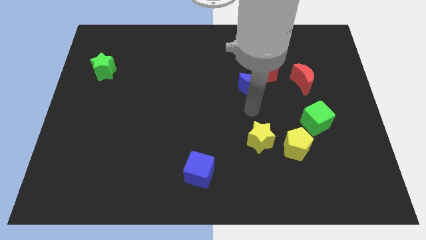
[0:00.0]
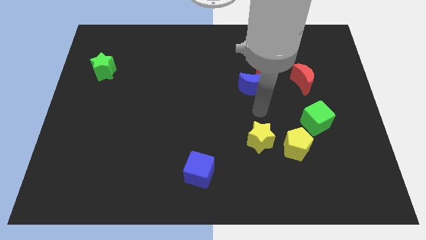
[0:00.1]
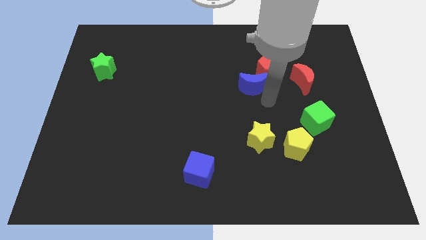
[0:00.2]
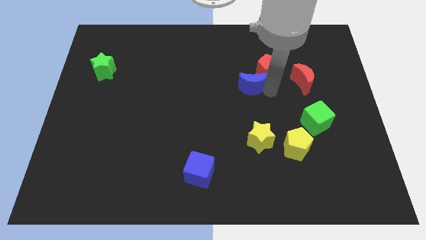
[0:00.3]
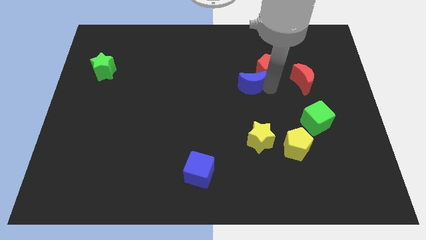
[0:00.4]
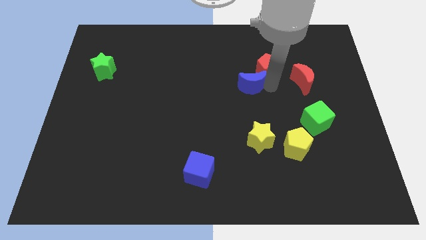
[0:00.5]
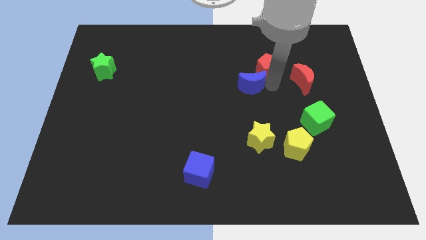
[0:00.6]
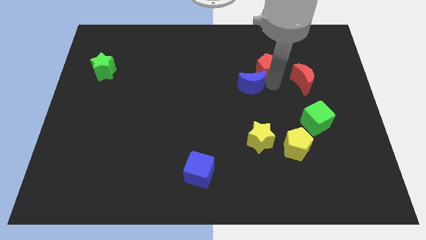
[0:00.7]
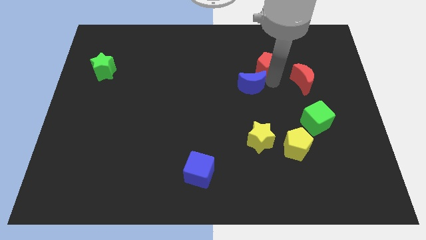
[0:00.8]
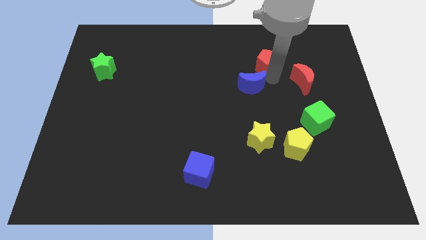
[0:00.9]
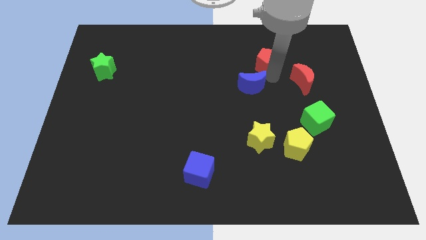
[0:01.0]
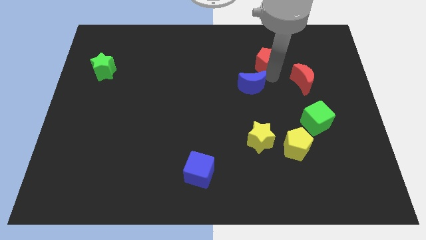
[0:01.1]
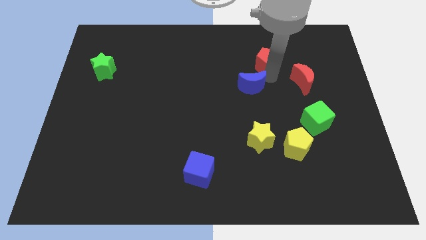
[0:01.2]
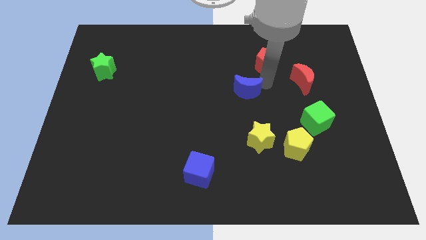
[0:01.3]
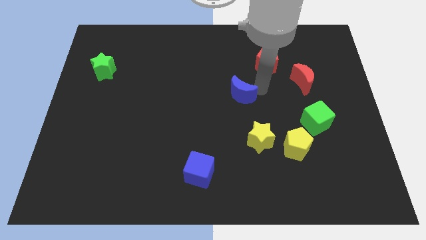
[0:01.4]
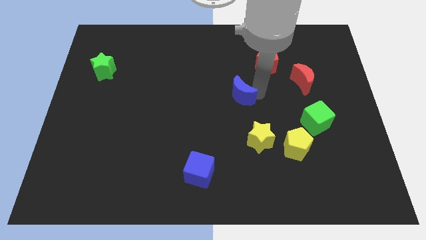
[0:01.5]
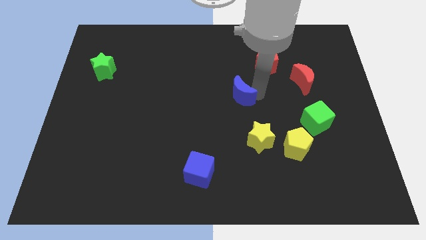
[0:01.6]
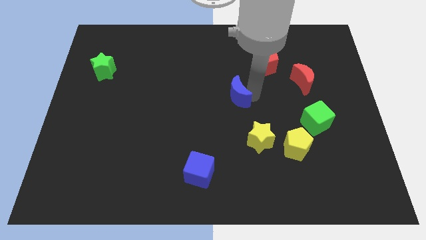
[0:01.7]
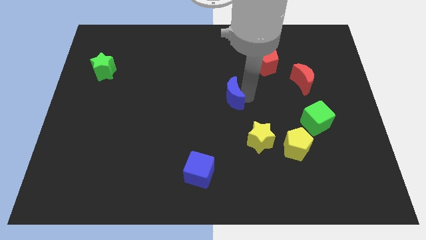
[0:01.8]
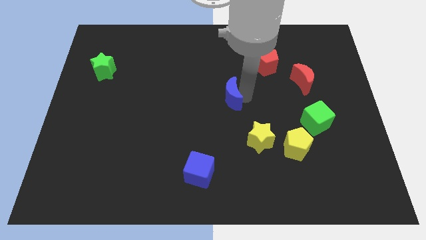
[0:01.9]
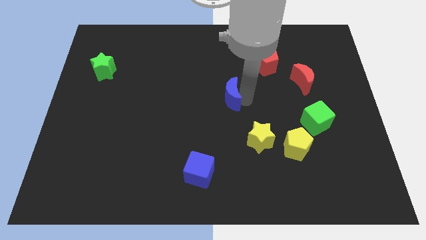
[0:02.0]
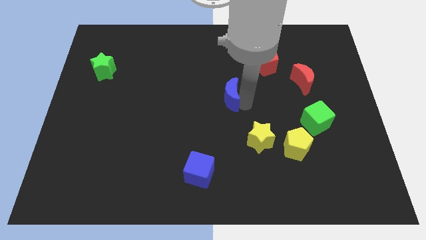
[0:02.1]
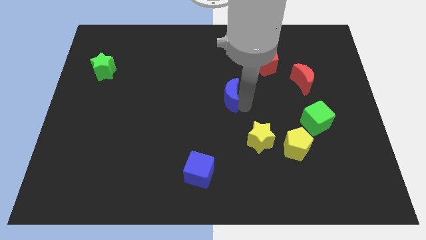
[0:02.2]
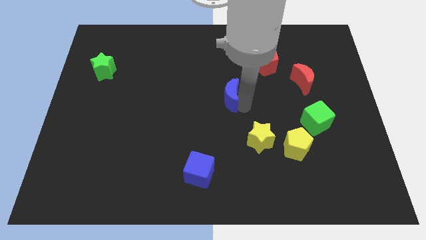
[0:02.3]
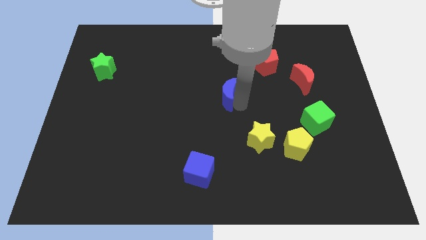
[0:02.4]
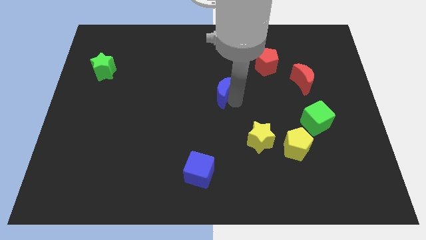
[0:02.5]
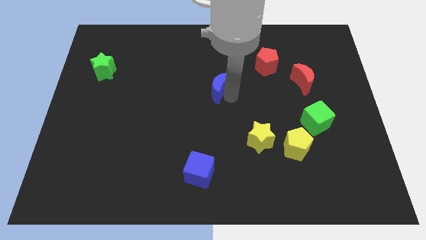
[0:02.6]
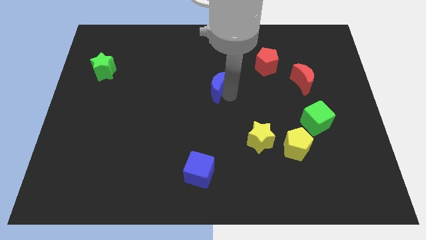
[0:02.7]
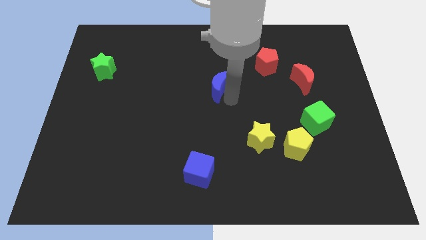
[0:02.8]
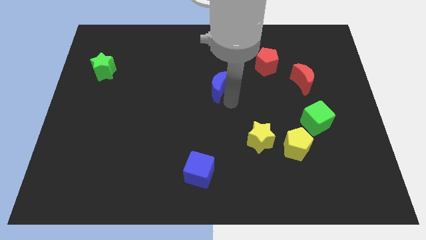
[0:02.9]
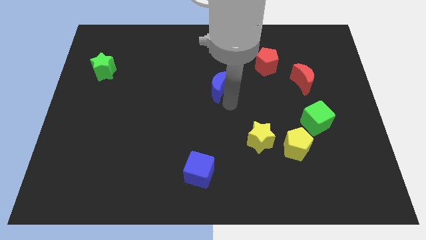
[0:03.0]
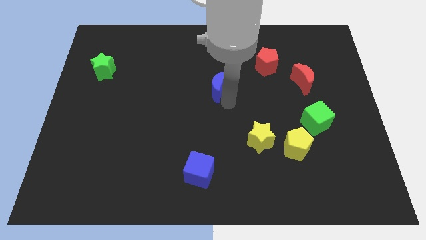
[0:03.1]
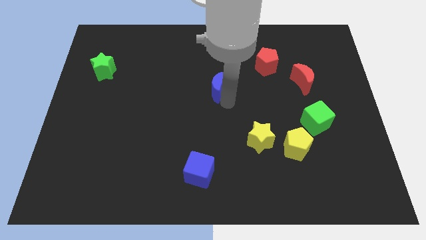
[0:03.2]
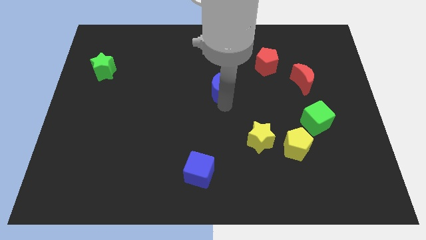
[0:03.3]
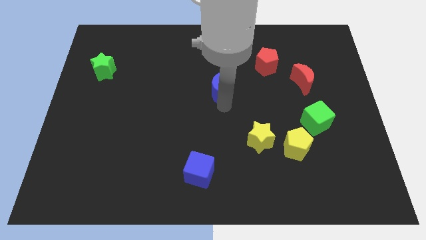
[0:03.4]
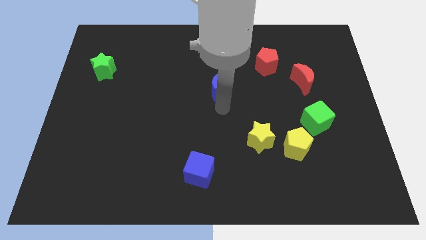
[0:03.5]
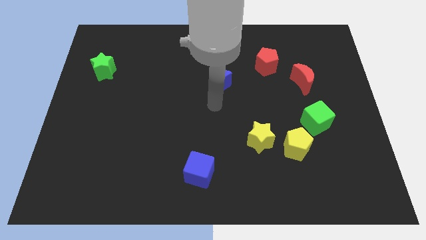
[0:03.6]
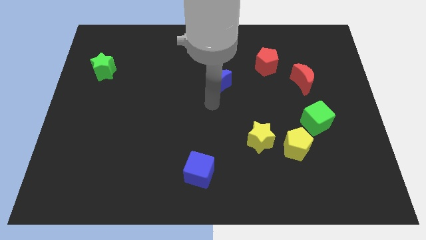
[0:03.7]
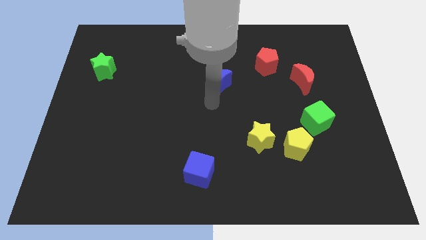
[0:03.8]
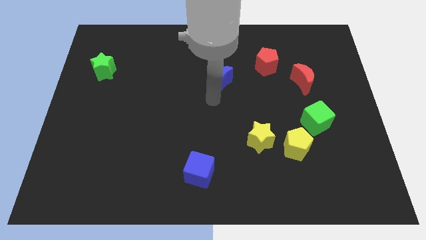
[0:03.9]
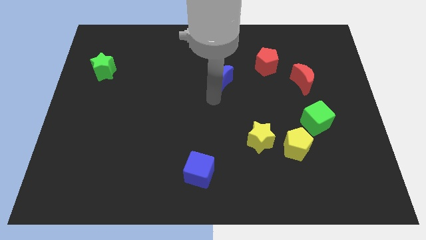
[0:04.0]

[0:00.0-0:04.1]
separate the blue moon from the red pentagon

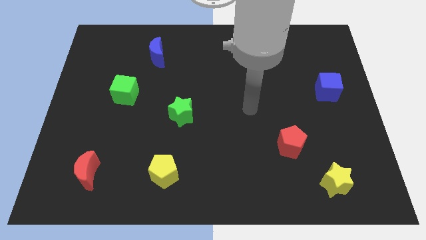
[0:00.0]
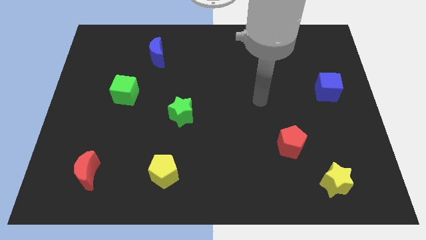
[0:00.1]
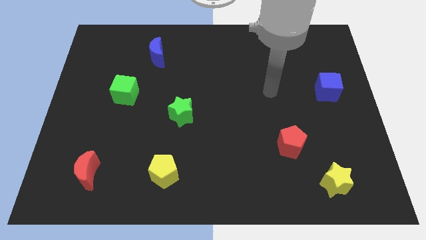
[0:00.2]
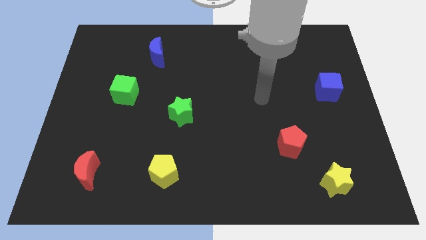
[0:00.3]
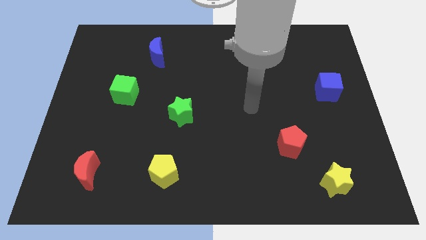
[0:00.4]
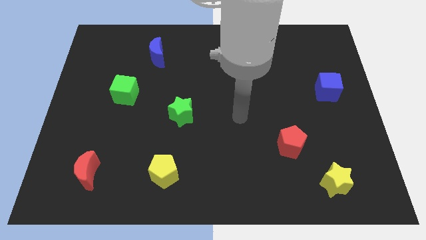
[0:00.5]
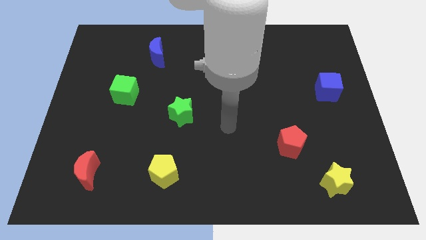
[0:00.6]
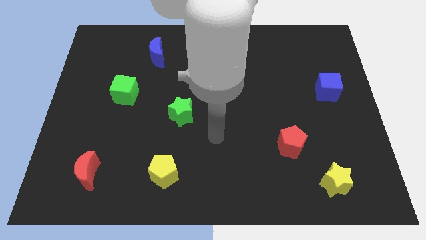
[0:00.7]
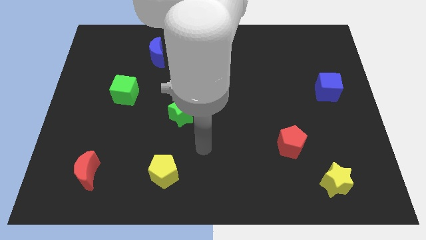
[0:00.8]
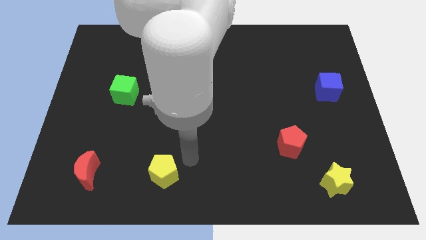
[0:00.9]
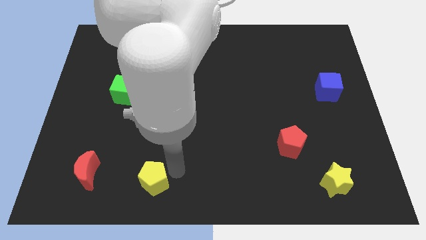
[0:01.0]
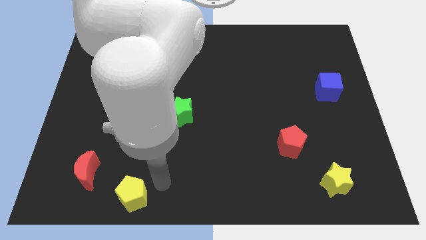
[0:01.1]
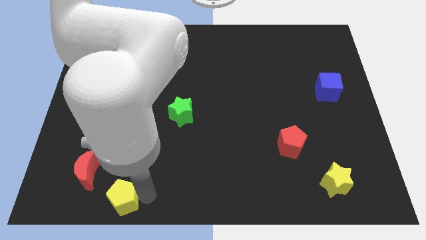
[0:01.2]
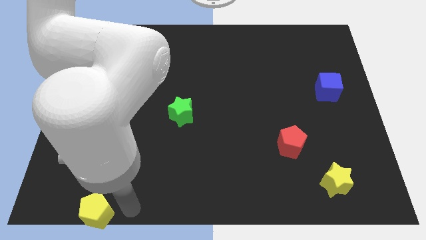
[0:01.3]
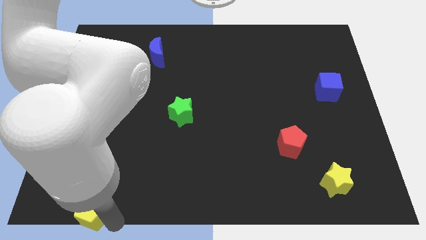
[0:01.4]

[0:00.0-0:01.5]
place yellow pentagon below red moon

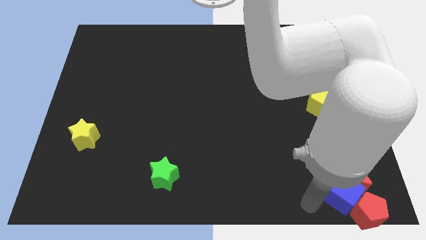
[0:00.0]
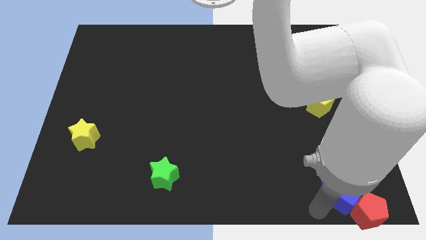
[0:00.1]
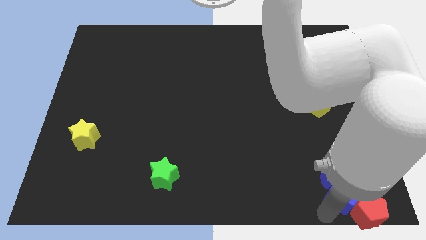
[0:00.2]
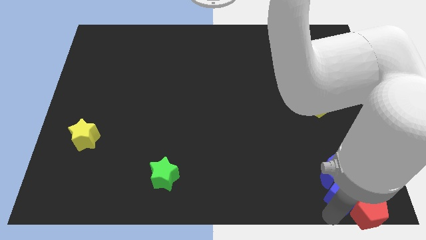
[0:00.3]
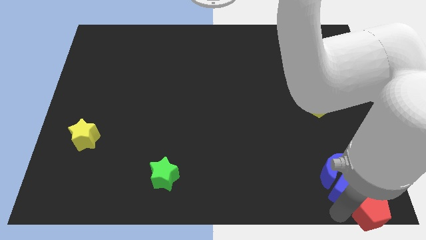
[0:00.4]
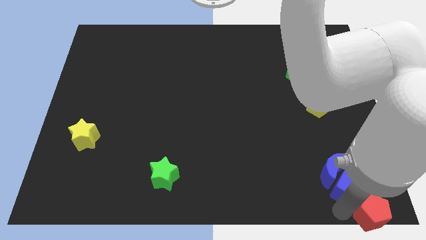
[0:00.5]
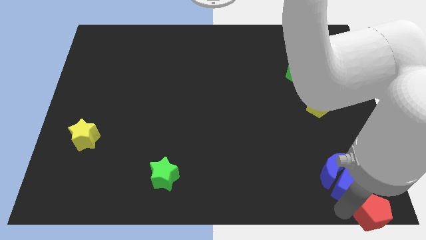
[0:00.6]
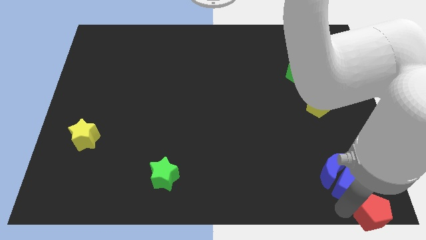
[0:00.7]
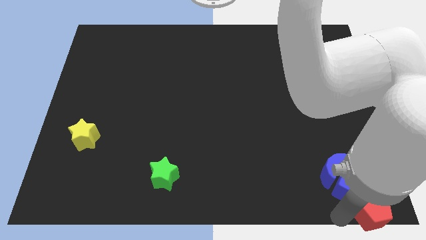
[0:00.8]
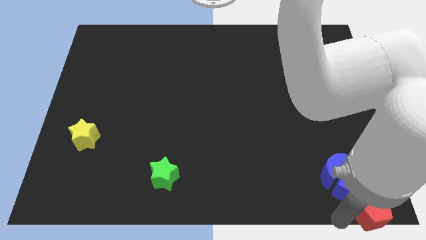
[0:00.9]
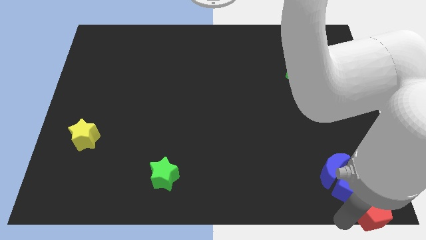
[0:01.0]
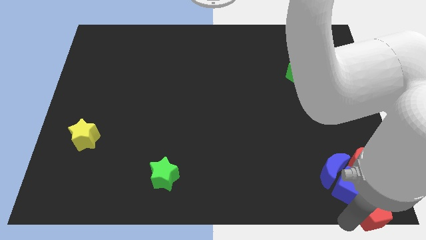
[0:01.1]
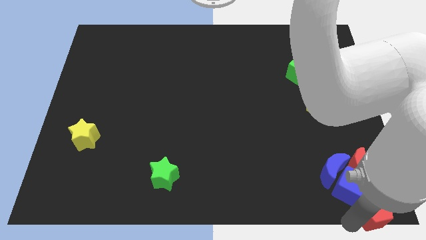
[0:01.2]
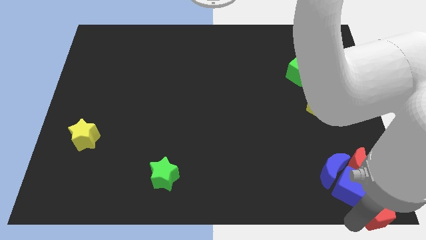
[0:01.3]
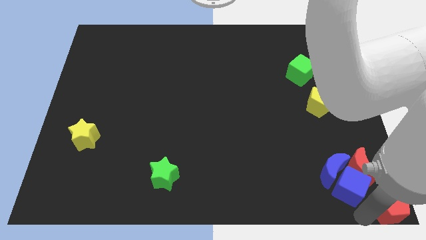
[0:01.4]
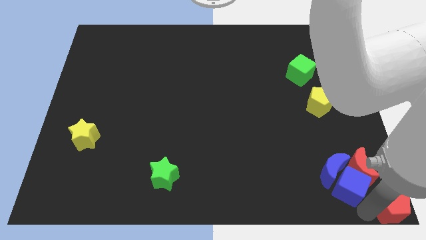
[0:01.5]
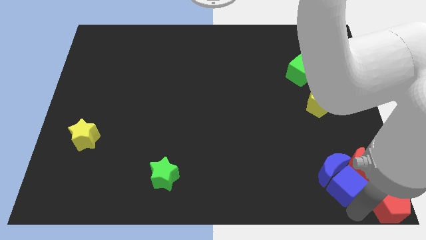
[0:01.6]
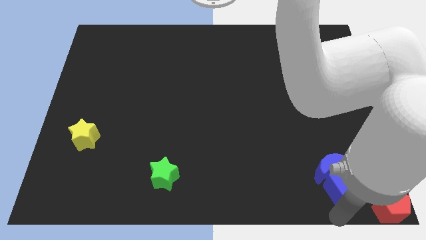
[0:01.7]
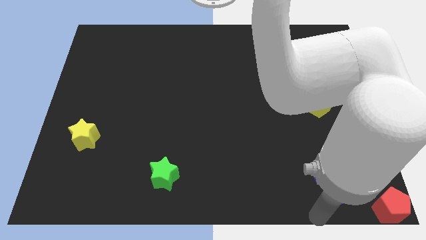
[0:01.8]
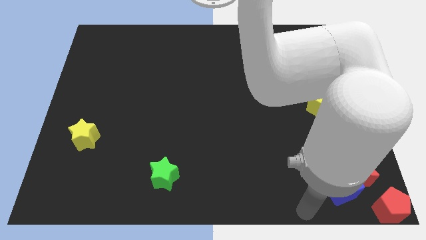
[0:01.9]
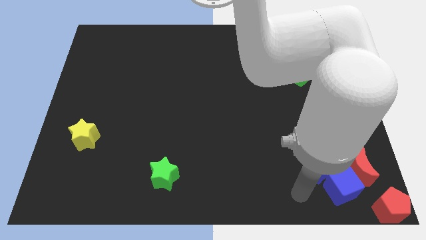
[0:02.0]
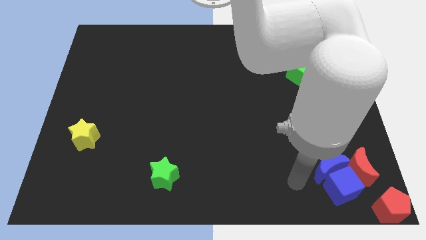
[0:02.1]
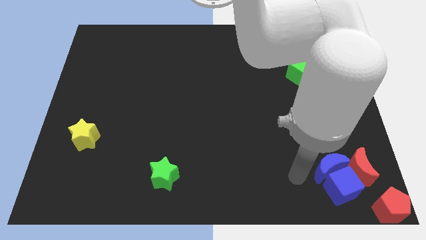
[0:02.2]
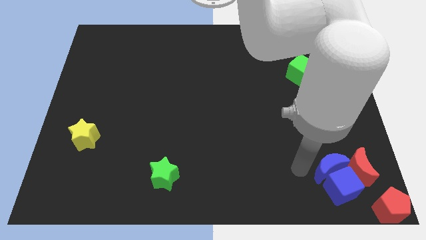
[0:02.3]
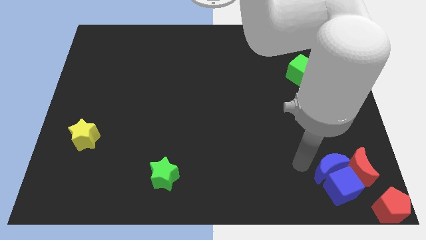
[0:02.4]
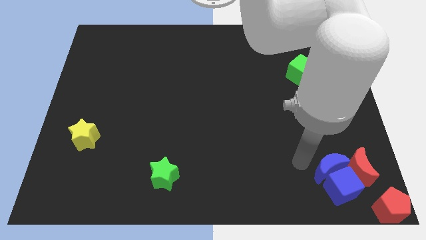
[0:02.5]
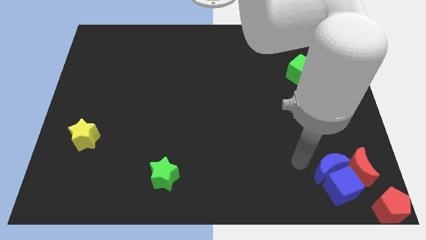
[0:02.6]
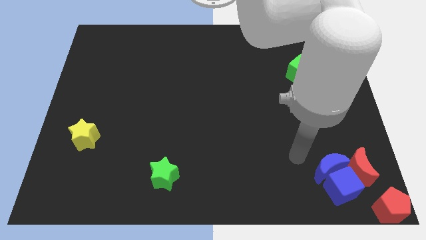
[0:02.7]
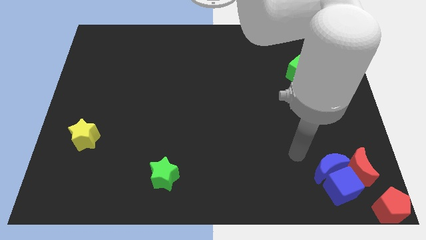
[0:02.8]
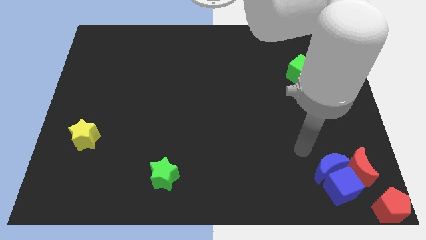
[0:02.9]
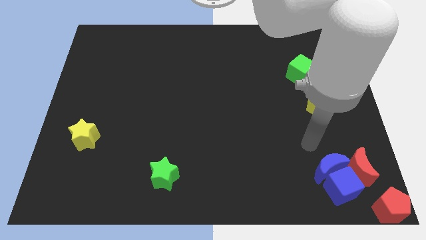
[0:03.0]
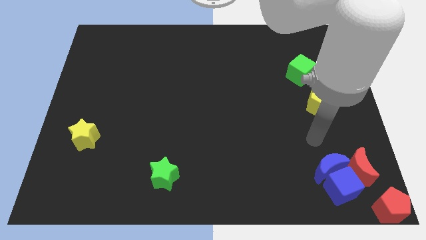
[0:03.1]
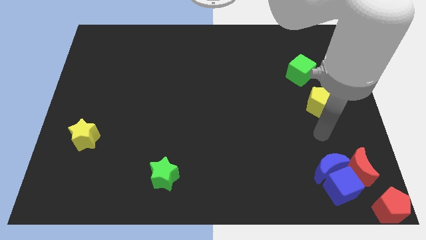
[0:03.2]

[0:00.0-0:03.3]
push red pentagon at the right bottom corner of the board

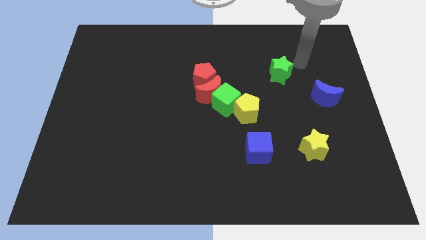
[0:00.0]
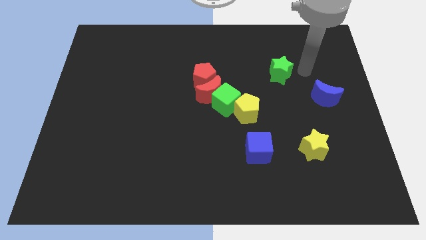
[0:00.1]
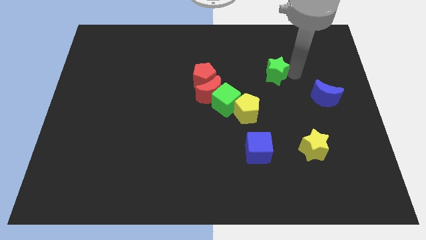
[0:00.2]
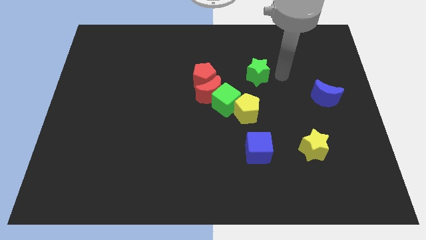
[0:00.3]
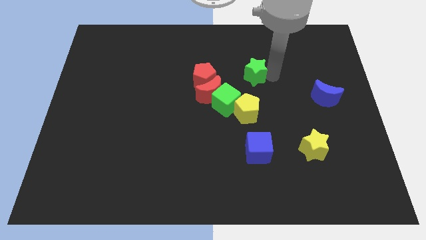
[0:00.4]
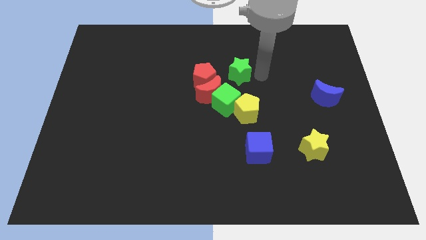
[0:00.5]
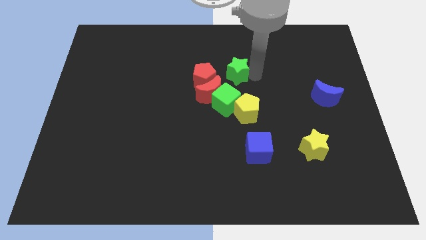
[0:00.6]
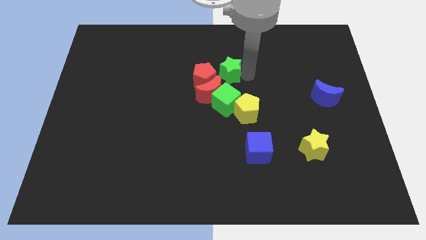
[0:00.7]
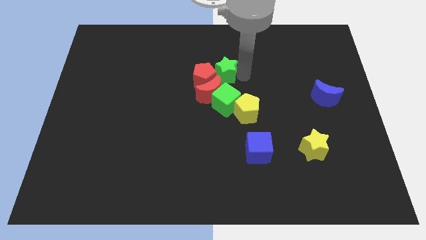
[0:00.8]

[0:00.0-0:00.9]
push the green star towards the red pentagon
